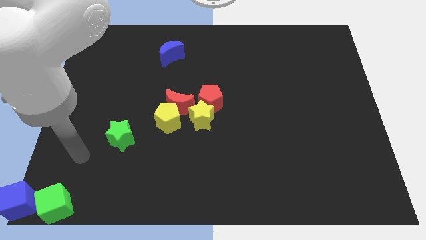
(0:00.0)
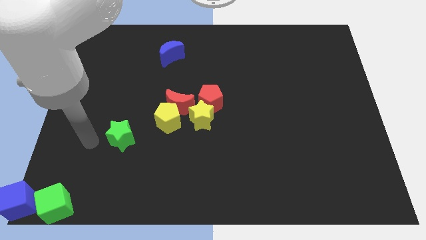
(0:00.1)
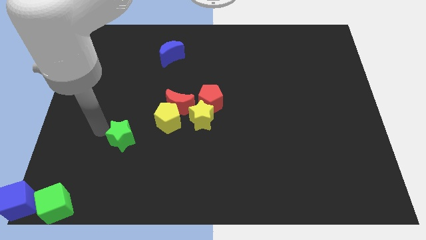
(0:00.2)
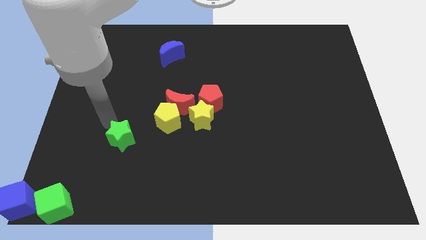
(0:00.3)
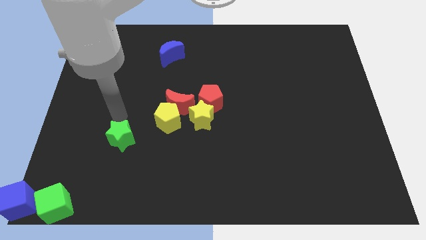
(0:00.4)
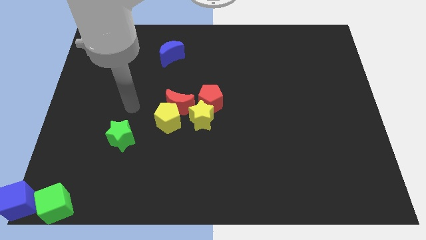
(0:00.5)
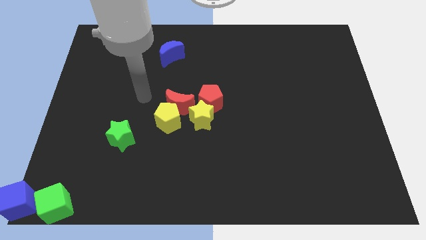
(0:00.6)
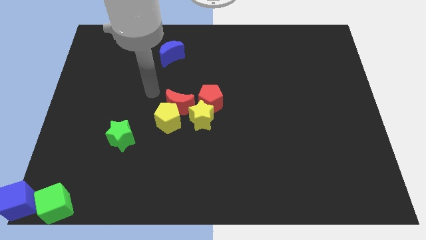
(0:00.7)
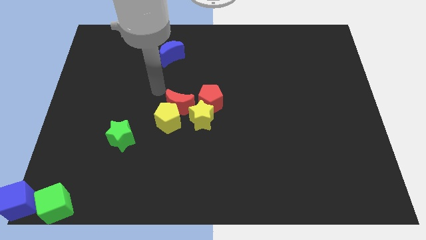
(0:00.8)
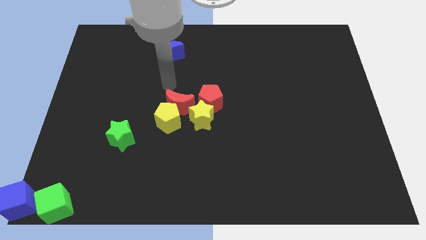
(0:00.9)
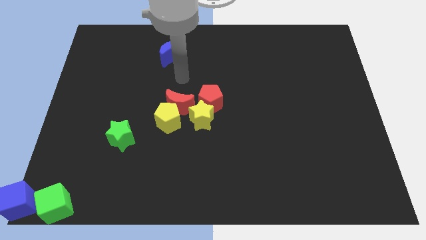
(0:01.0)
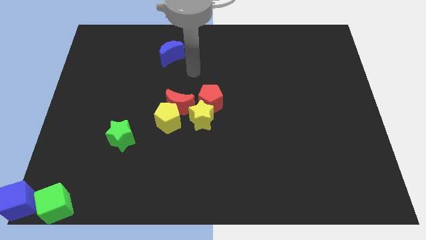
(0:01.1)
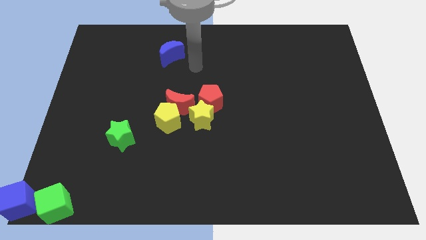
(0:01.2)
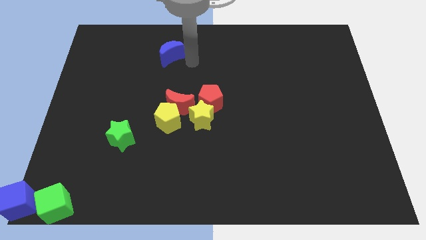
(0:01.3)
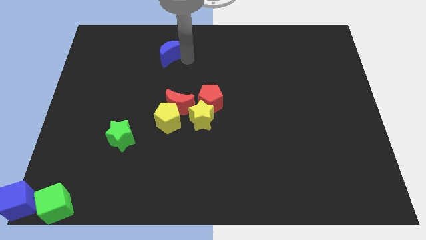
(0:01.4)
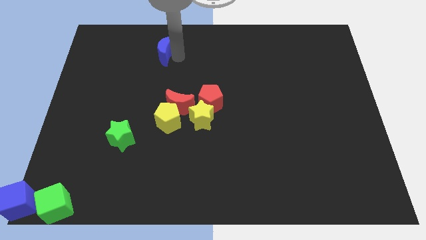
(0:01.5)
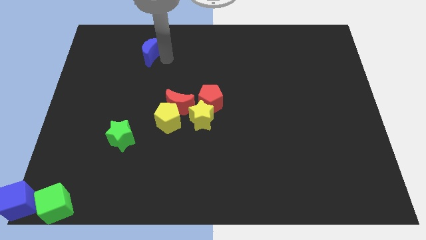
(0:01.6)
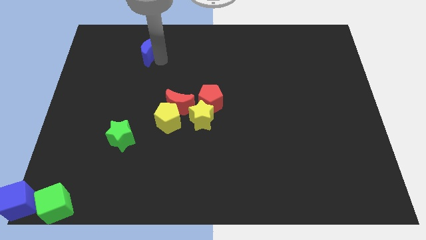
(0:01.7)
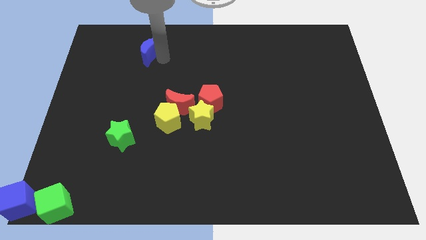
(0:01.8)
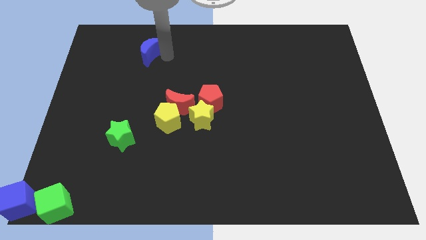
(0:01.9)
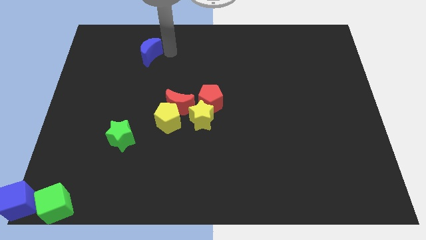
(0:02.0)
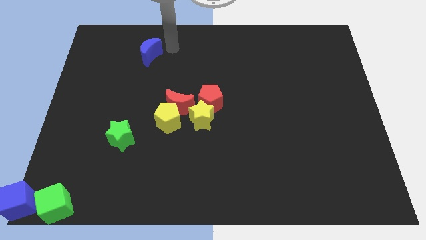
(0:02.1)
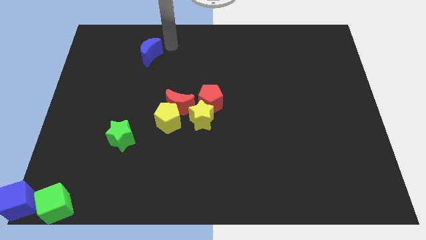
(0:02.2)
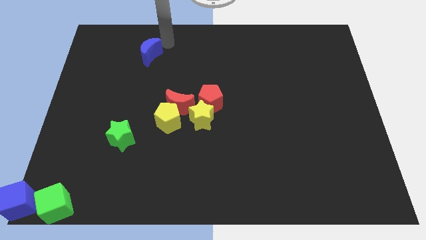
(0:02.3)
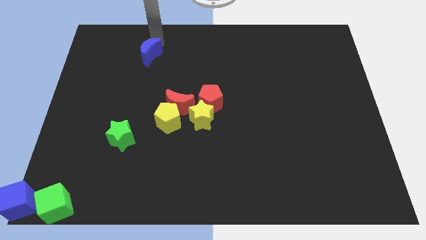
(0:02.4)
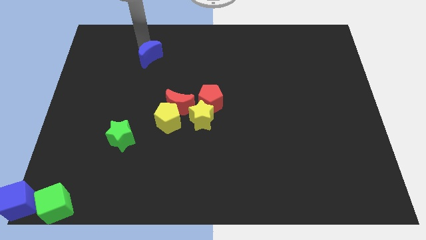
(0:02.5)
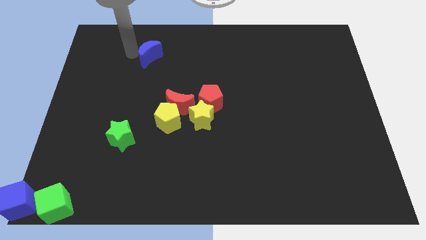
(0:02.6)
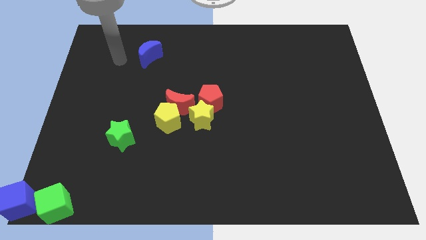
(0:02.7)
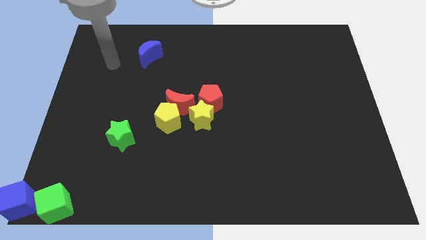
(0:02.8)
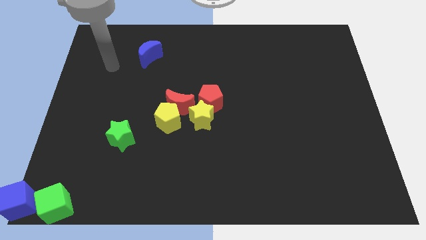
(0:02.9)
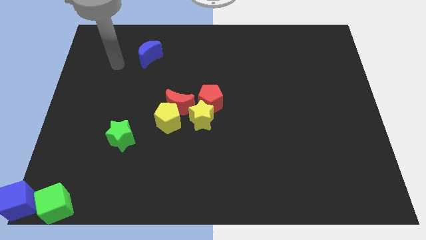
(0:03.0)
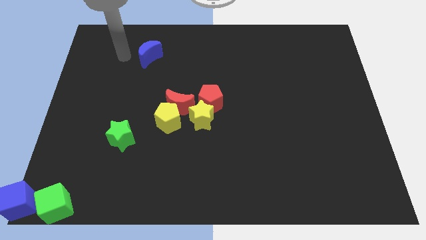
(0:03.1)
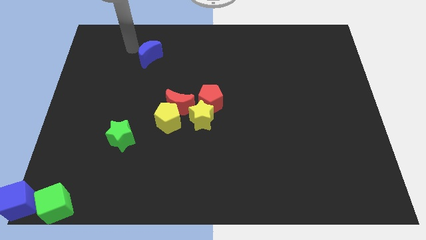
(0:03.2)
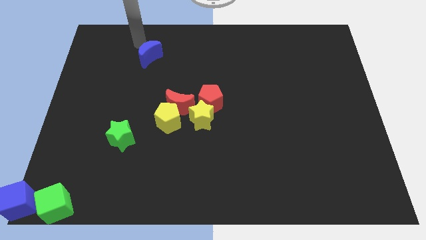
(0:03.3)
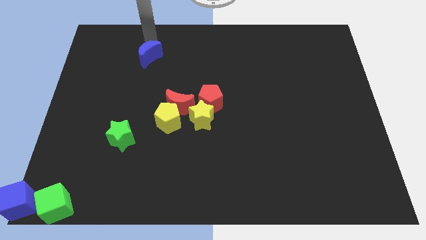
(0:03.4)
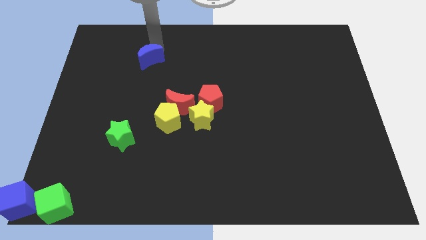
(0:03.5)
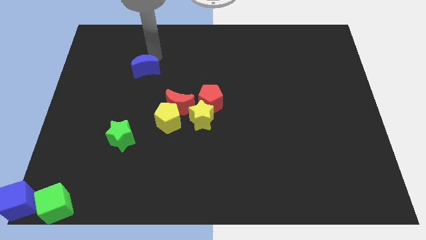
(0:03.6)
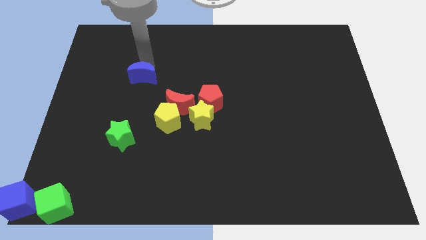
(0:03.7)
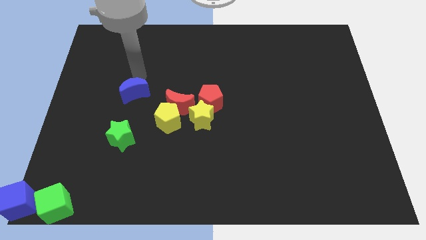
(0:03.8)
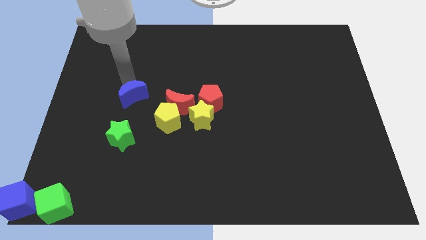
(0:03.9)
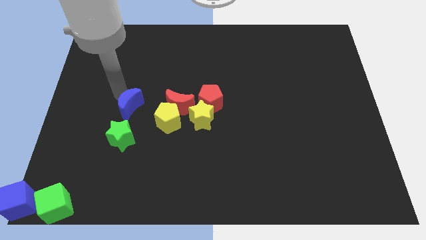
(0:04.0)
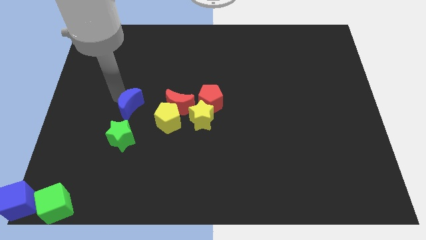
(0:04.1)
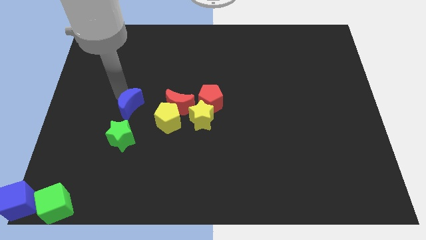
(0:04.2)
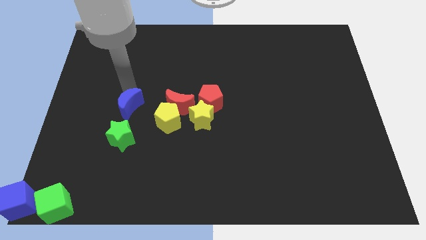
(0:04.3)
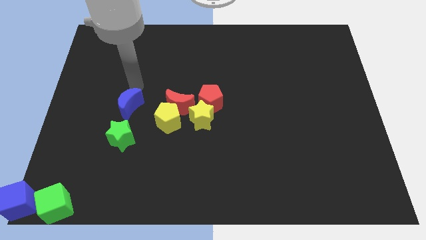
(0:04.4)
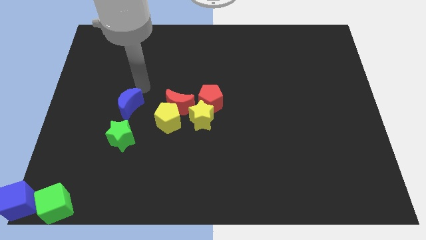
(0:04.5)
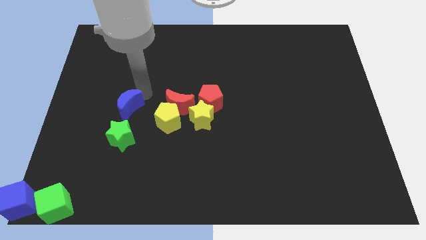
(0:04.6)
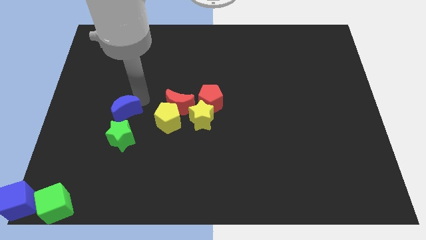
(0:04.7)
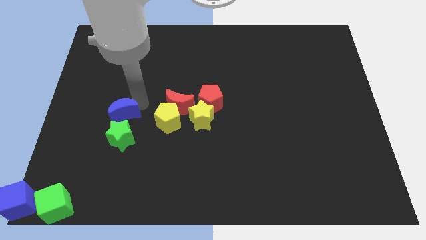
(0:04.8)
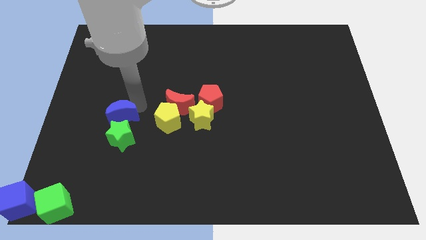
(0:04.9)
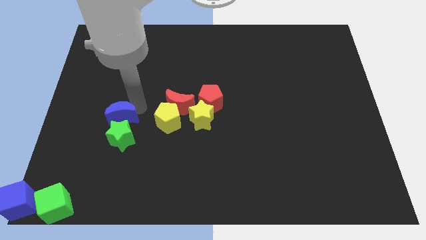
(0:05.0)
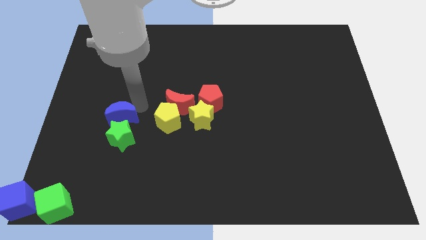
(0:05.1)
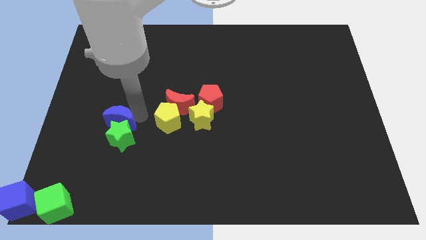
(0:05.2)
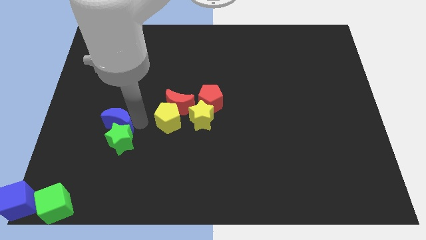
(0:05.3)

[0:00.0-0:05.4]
place the blue crescent above the green star

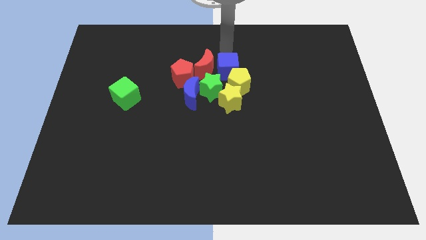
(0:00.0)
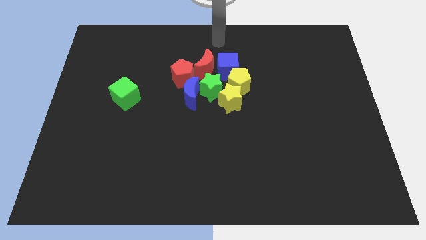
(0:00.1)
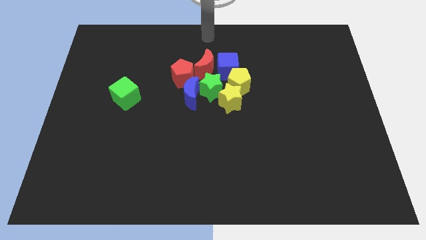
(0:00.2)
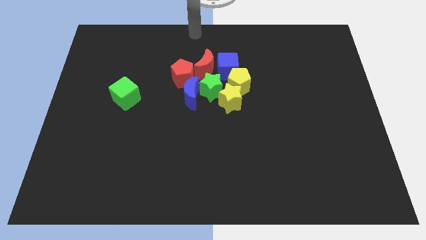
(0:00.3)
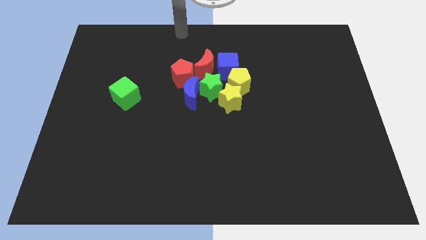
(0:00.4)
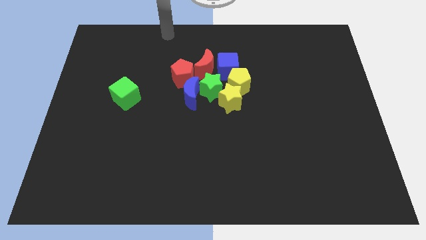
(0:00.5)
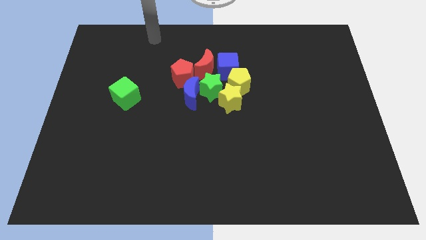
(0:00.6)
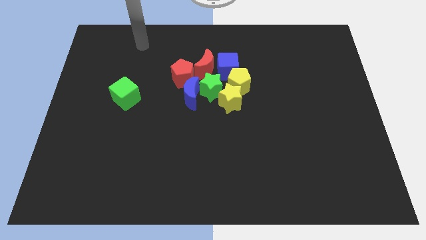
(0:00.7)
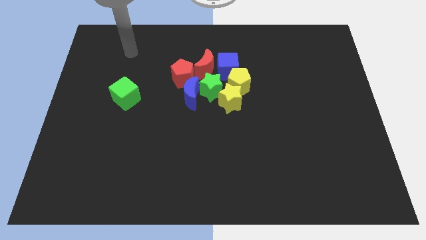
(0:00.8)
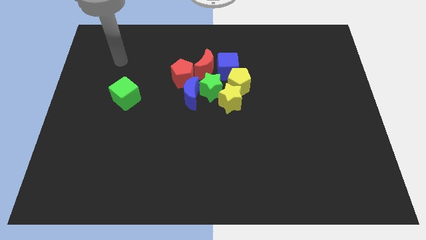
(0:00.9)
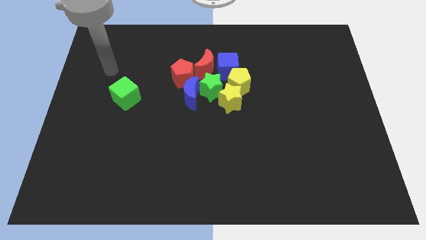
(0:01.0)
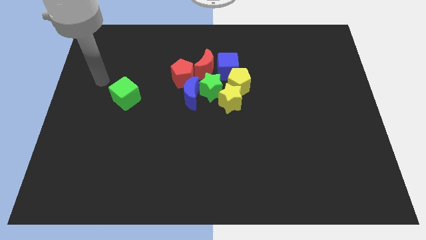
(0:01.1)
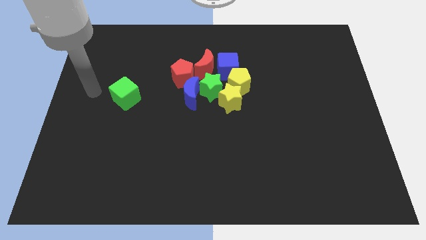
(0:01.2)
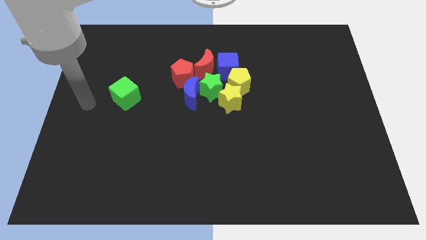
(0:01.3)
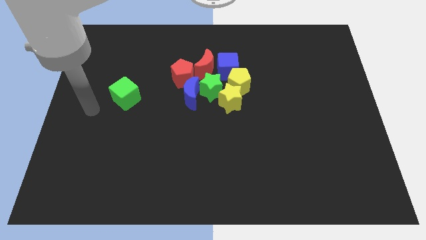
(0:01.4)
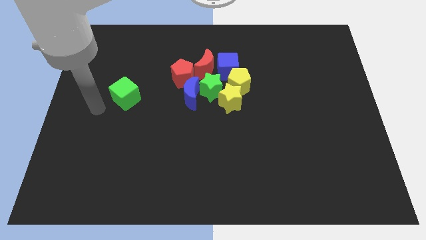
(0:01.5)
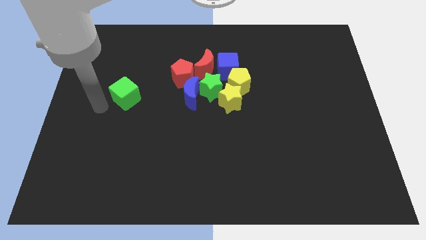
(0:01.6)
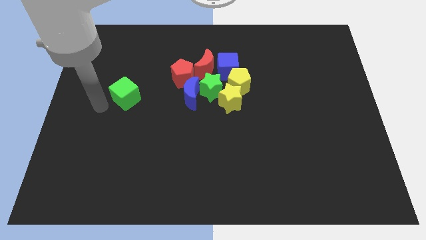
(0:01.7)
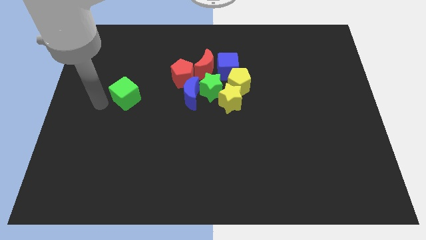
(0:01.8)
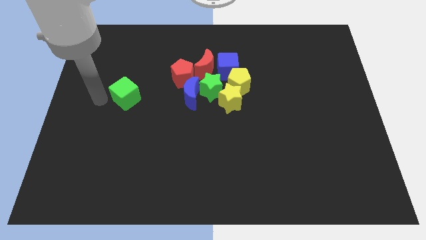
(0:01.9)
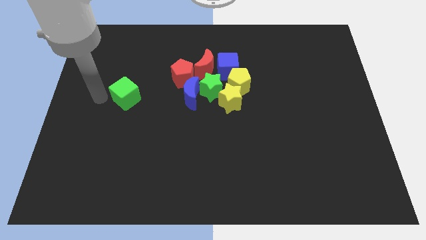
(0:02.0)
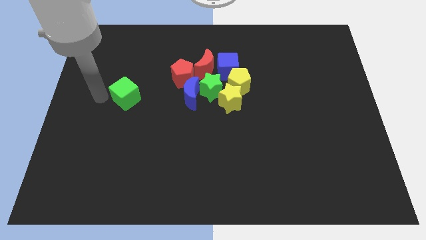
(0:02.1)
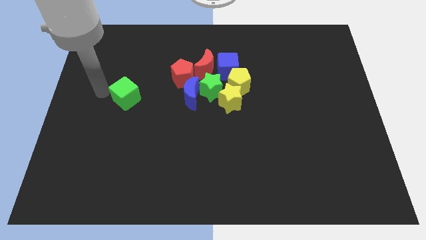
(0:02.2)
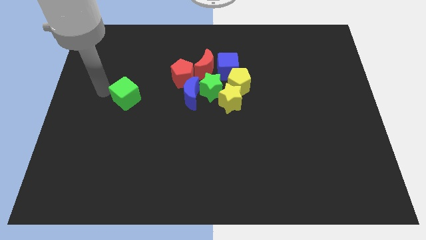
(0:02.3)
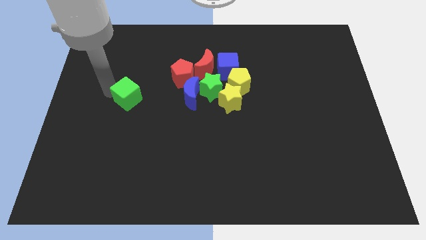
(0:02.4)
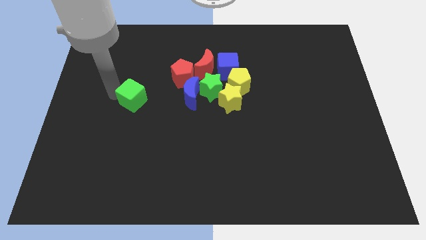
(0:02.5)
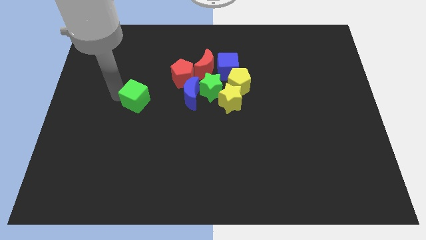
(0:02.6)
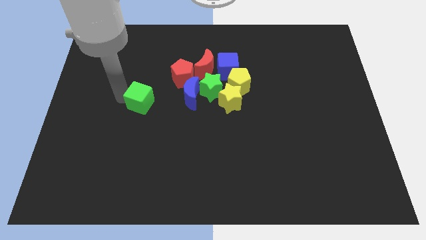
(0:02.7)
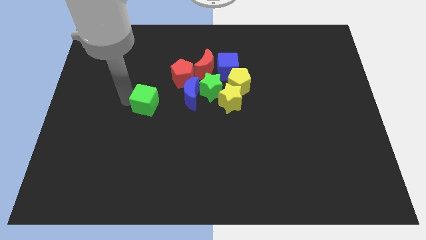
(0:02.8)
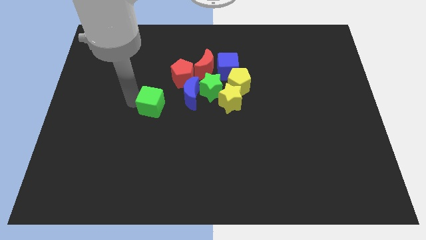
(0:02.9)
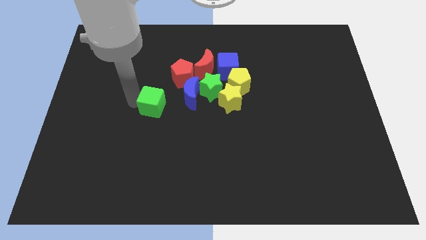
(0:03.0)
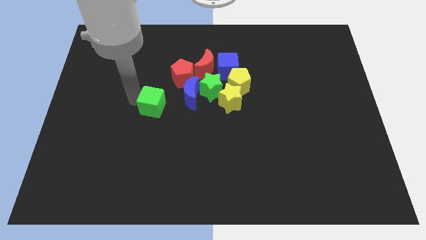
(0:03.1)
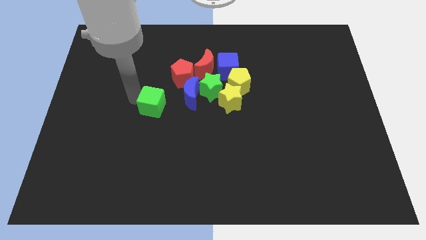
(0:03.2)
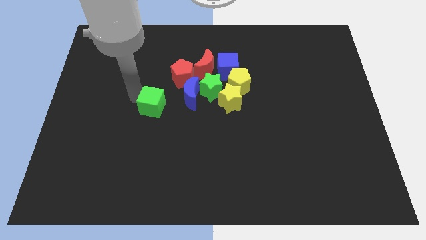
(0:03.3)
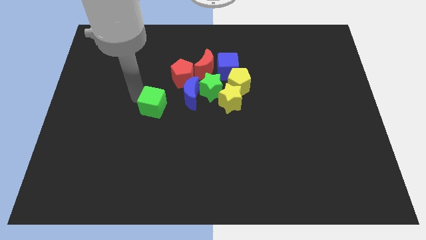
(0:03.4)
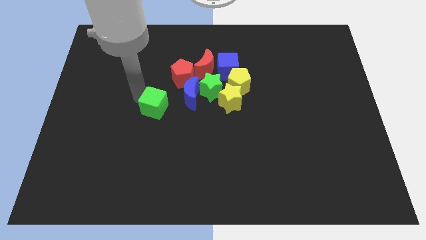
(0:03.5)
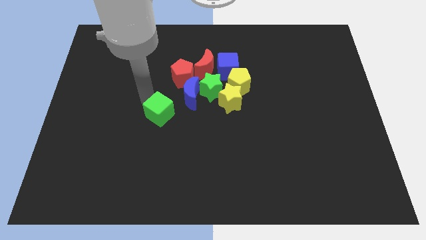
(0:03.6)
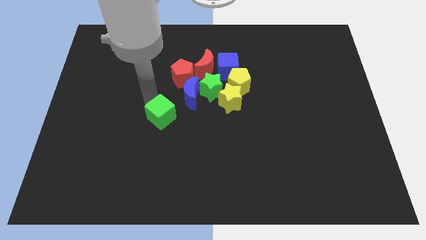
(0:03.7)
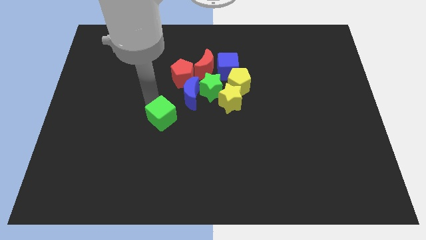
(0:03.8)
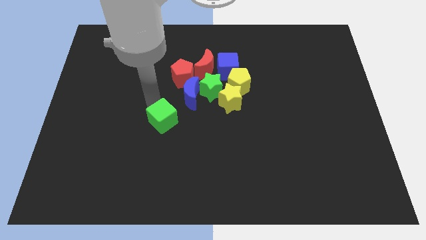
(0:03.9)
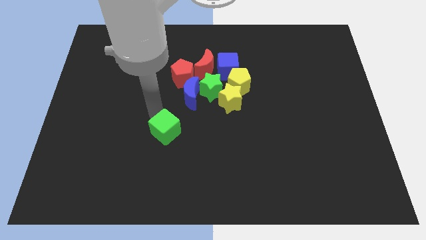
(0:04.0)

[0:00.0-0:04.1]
move the green cube slightly down
